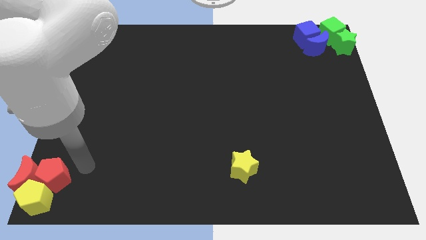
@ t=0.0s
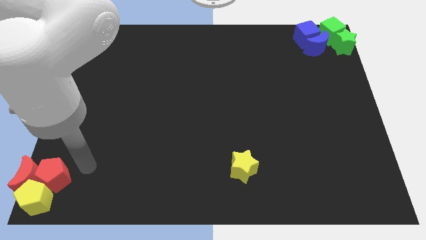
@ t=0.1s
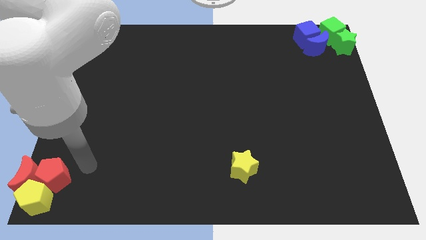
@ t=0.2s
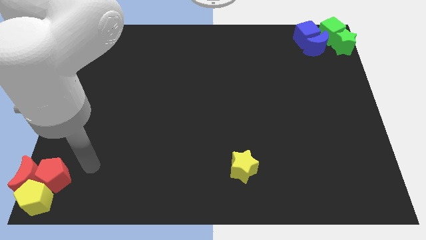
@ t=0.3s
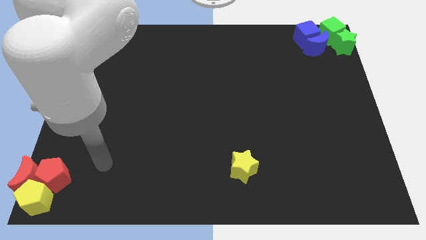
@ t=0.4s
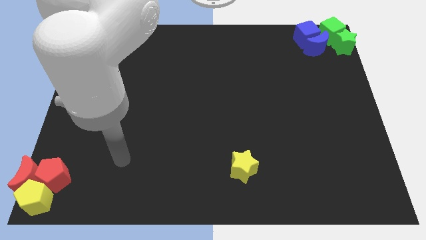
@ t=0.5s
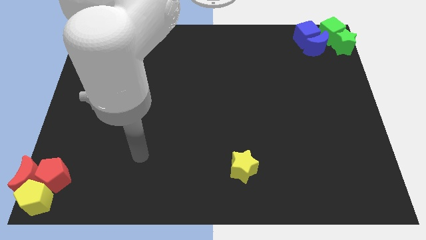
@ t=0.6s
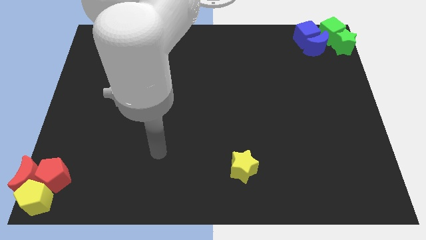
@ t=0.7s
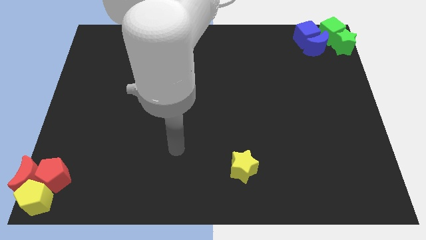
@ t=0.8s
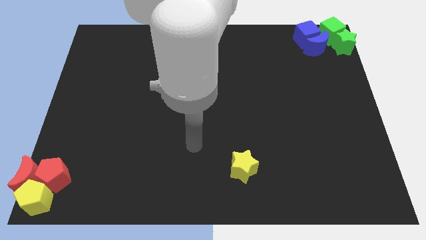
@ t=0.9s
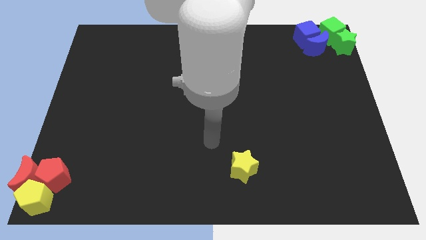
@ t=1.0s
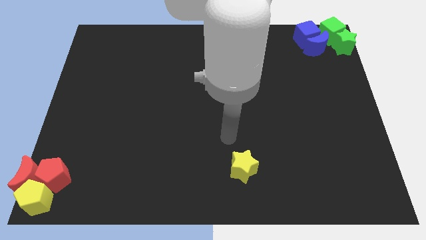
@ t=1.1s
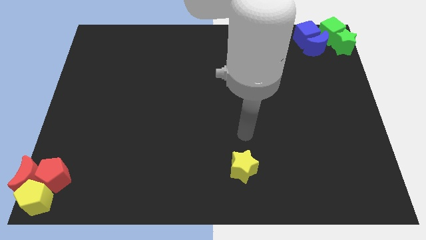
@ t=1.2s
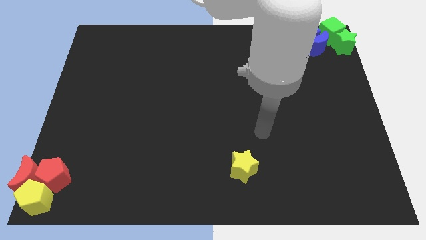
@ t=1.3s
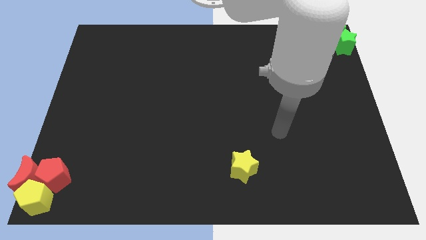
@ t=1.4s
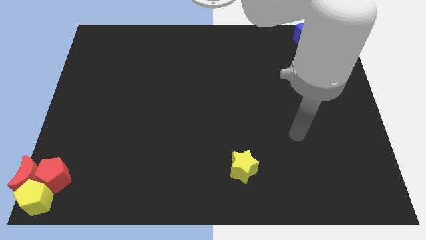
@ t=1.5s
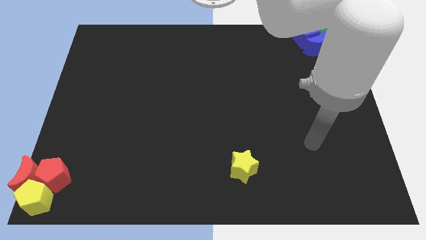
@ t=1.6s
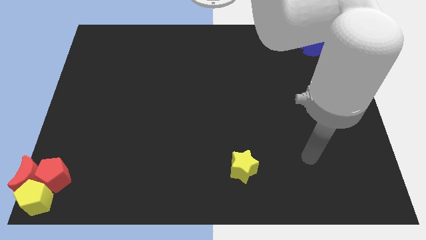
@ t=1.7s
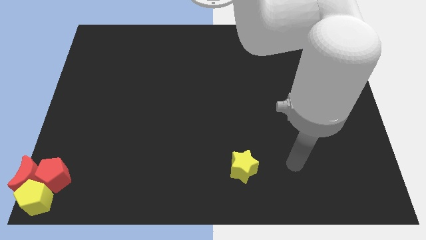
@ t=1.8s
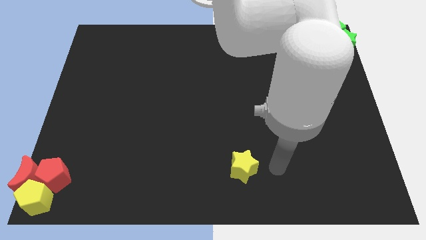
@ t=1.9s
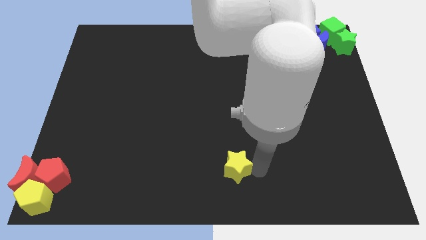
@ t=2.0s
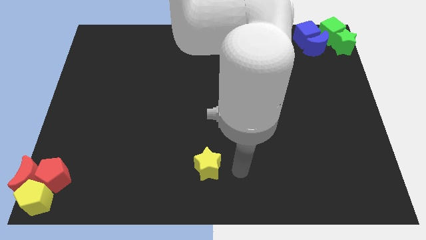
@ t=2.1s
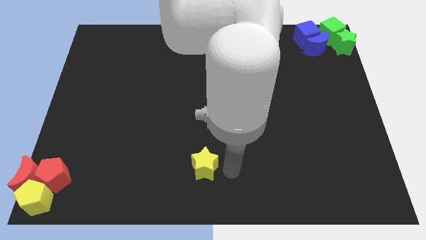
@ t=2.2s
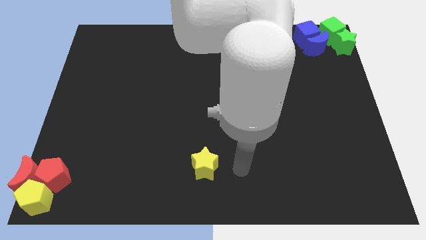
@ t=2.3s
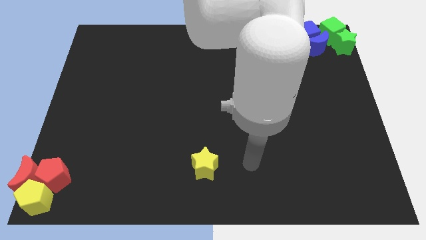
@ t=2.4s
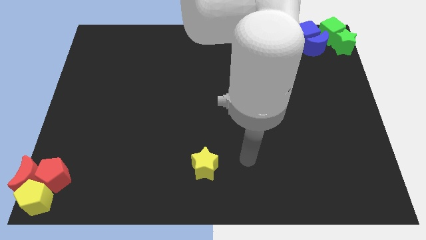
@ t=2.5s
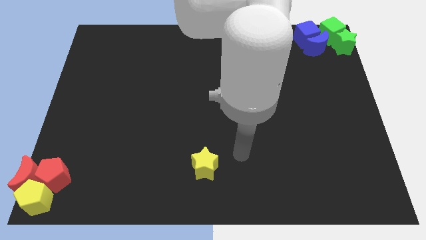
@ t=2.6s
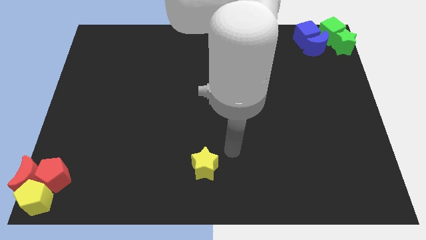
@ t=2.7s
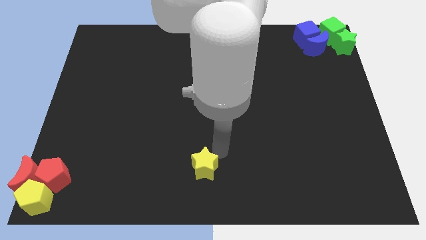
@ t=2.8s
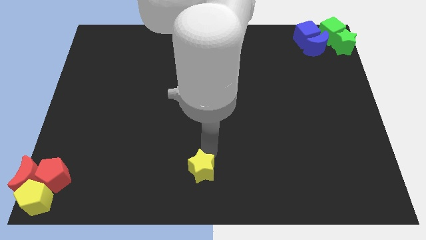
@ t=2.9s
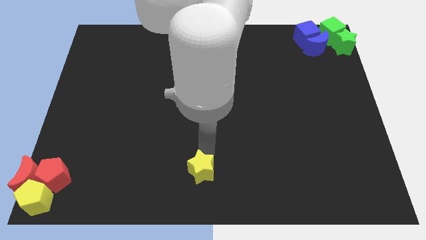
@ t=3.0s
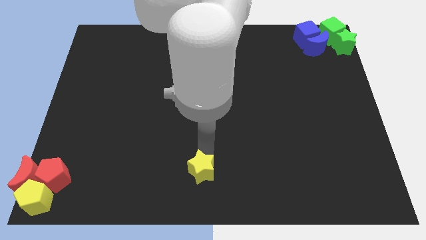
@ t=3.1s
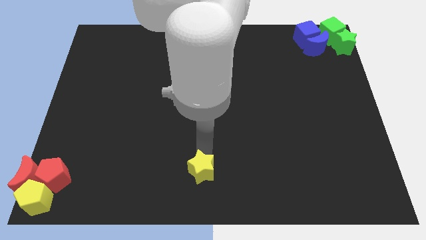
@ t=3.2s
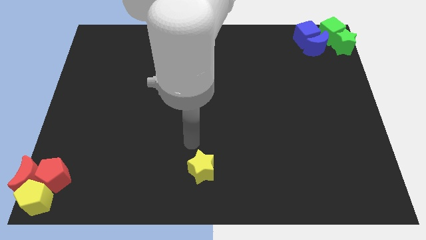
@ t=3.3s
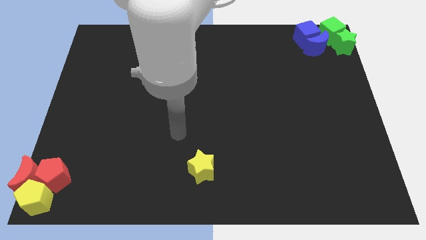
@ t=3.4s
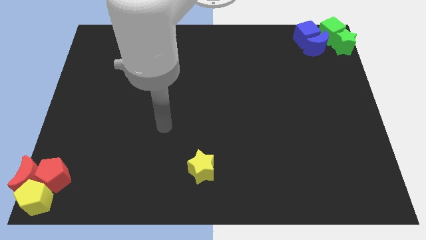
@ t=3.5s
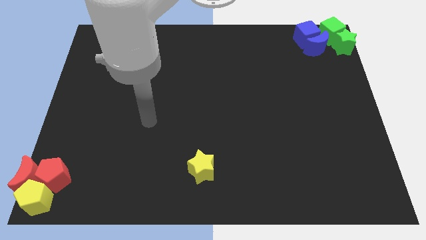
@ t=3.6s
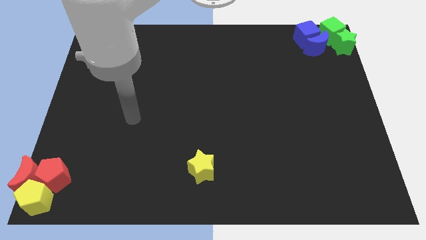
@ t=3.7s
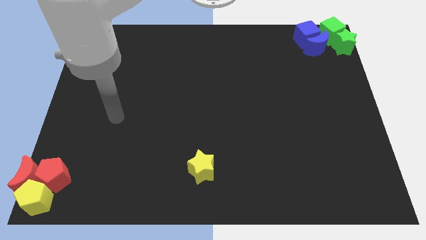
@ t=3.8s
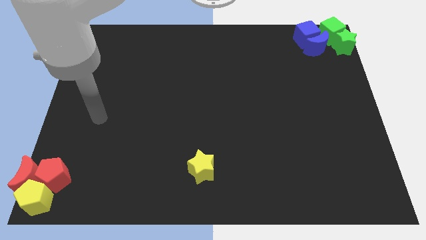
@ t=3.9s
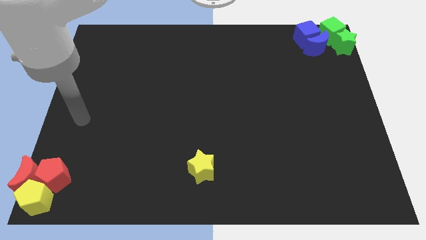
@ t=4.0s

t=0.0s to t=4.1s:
move the yellow star slightly to the left

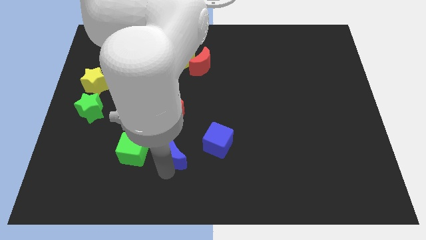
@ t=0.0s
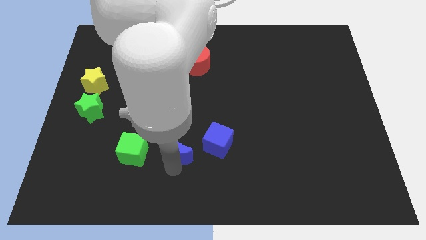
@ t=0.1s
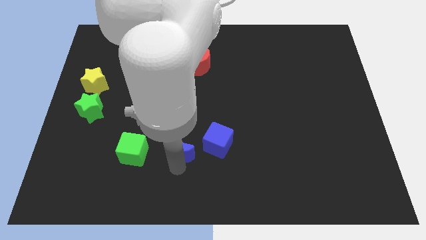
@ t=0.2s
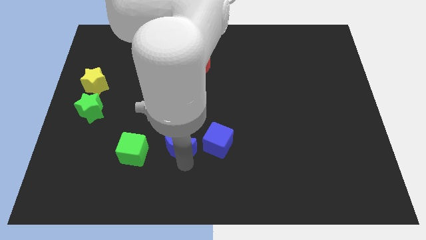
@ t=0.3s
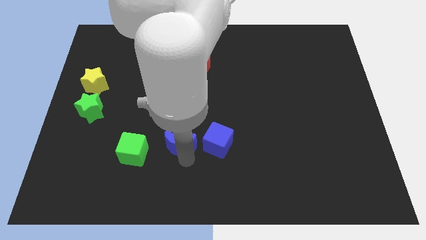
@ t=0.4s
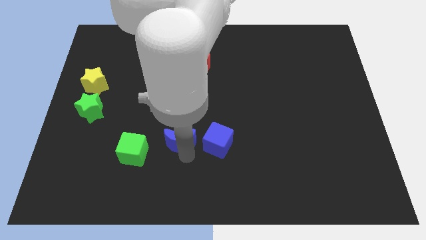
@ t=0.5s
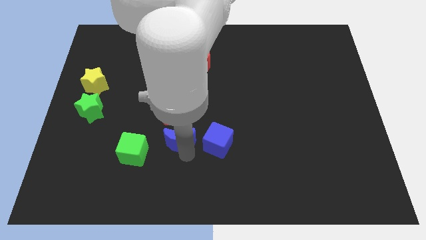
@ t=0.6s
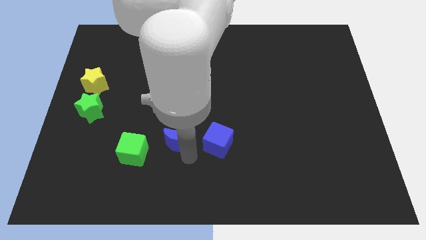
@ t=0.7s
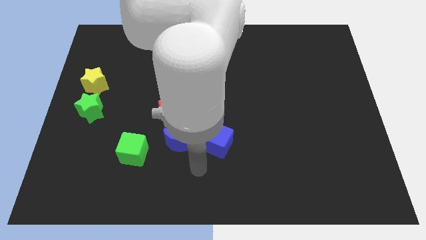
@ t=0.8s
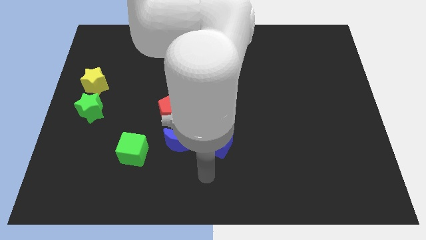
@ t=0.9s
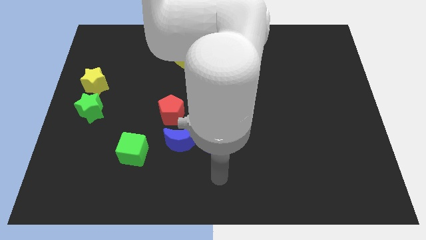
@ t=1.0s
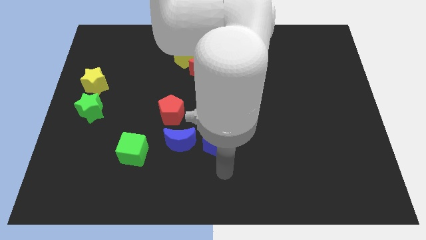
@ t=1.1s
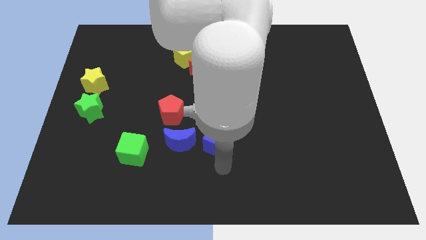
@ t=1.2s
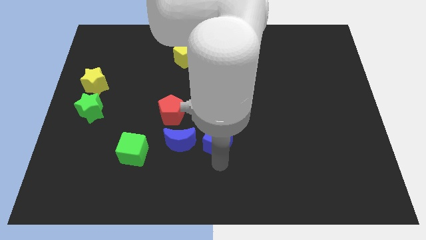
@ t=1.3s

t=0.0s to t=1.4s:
place the blue crescent vertically below the red pentagon

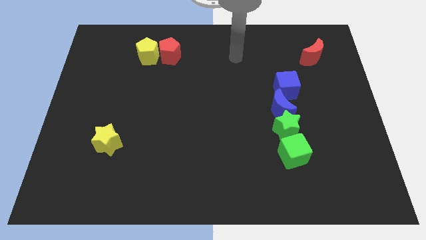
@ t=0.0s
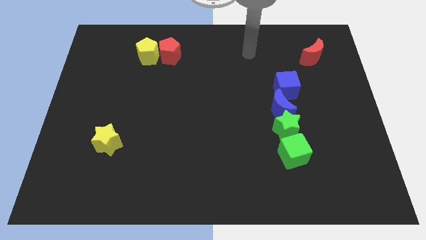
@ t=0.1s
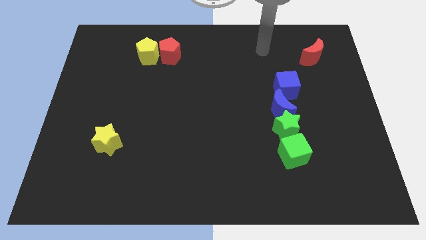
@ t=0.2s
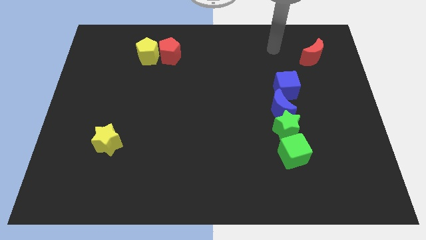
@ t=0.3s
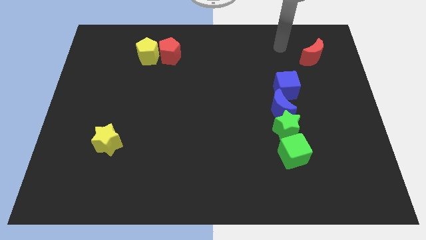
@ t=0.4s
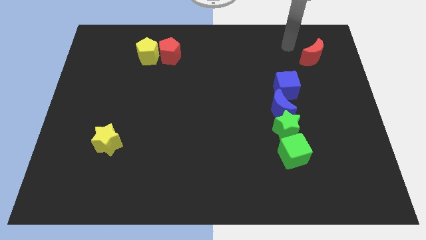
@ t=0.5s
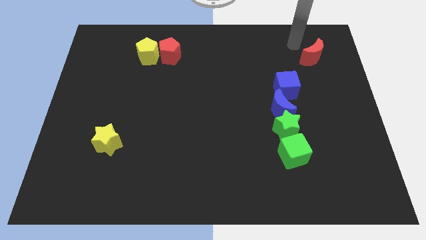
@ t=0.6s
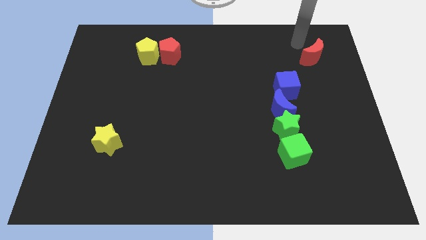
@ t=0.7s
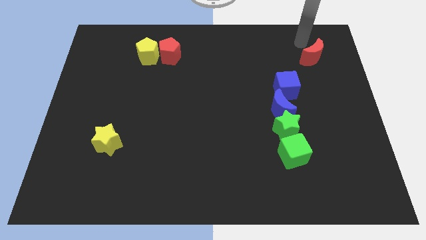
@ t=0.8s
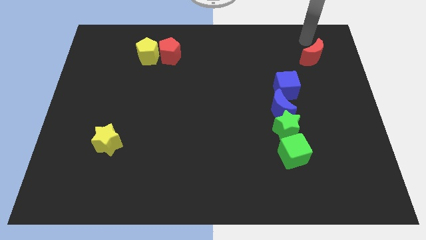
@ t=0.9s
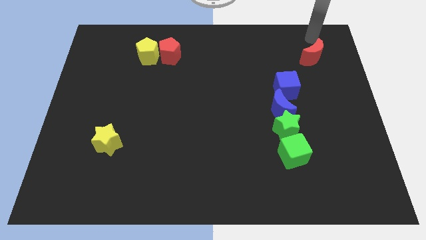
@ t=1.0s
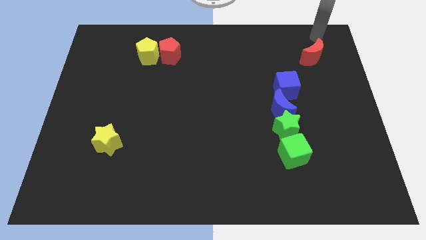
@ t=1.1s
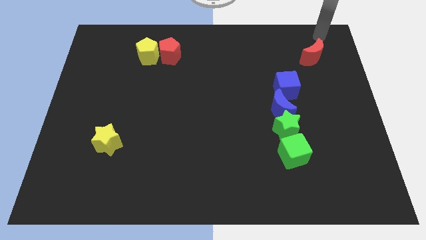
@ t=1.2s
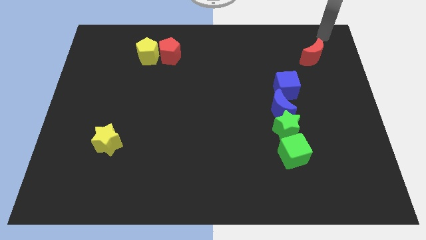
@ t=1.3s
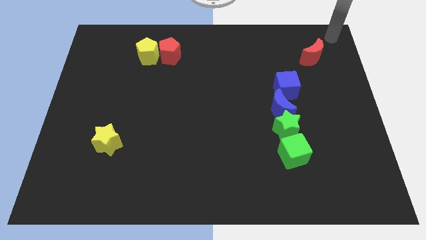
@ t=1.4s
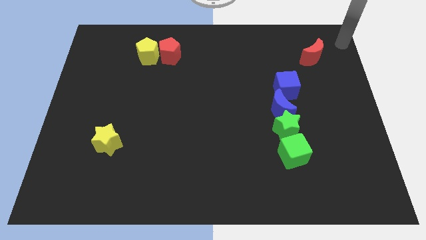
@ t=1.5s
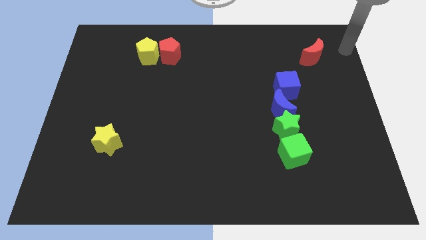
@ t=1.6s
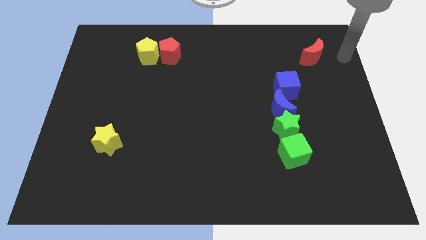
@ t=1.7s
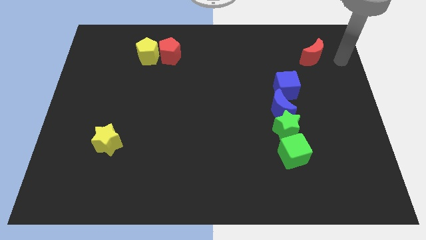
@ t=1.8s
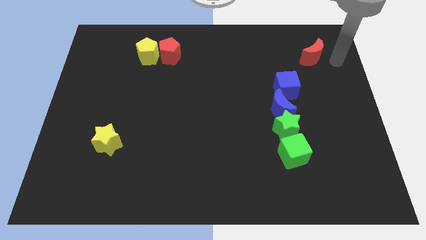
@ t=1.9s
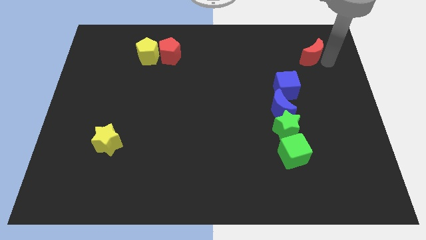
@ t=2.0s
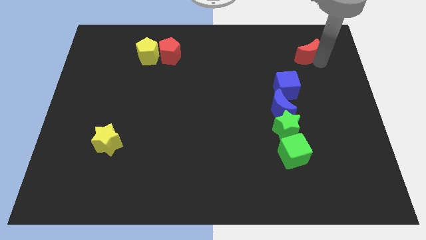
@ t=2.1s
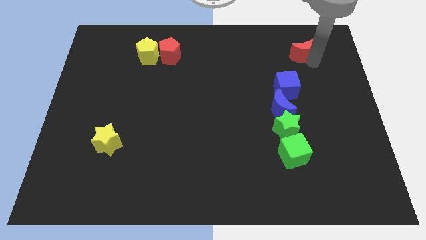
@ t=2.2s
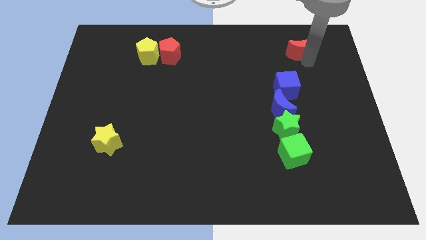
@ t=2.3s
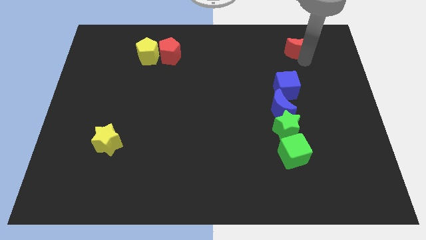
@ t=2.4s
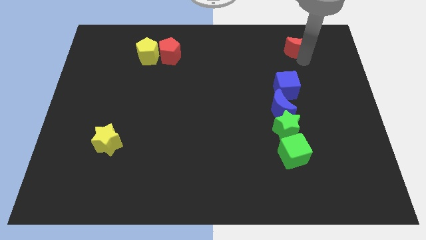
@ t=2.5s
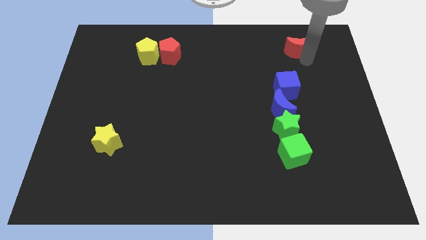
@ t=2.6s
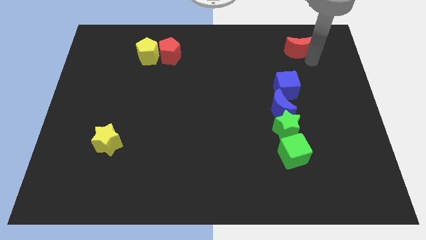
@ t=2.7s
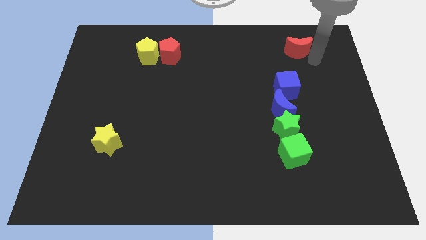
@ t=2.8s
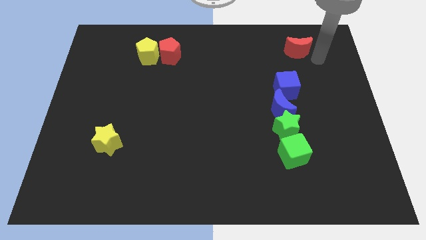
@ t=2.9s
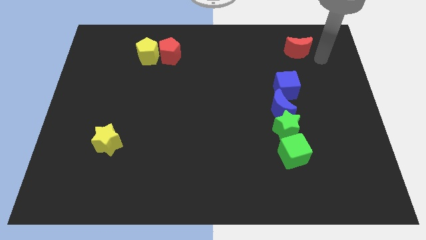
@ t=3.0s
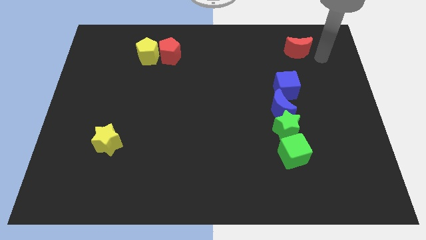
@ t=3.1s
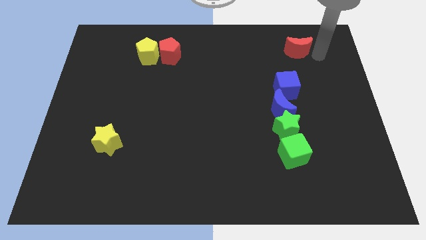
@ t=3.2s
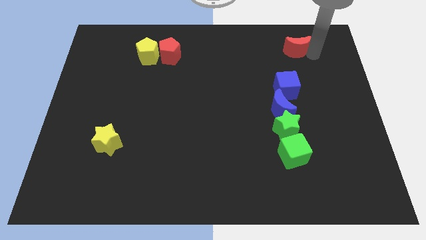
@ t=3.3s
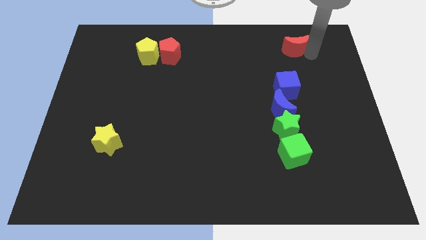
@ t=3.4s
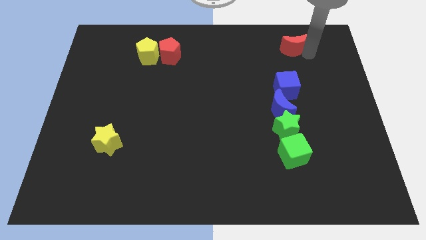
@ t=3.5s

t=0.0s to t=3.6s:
move the red pentagon slightly to the top
